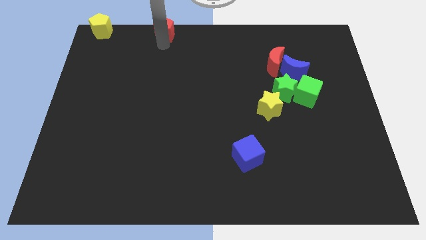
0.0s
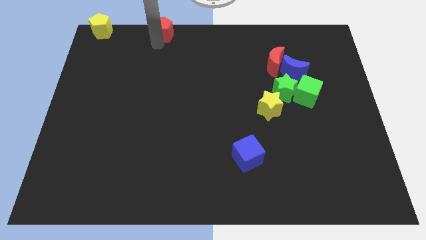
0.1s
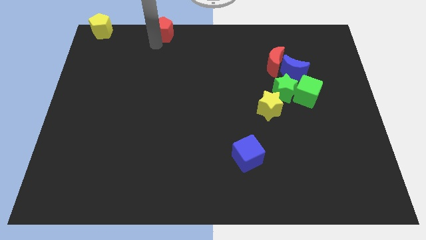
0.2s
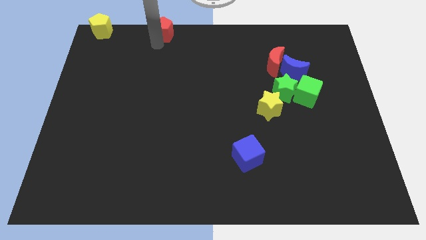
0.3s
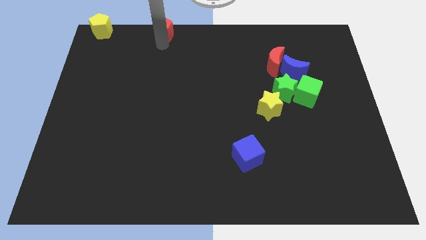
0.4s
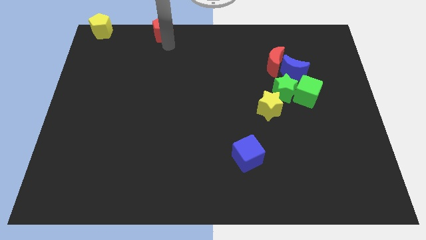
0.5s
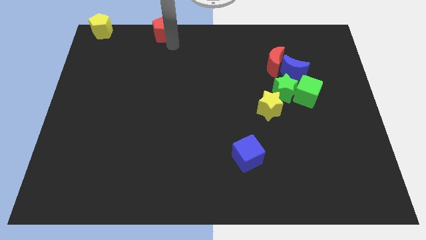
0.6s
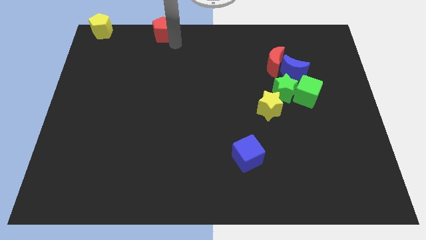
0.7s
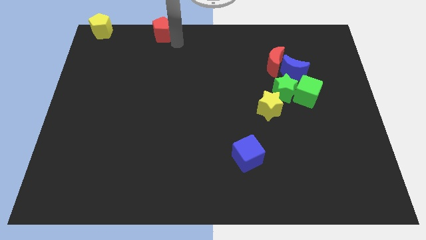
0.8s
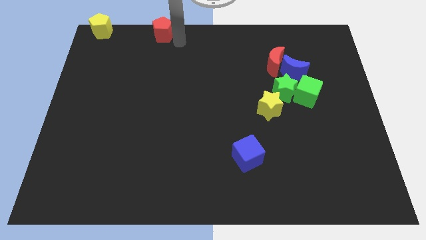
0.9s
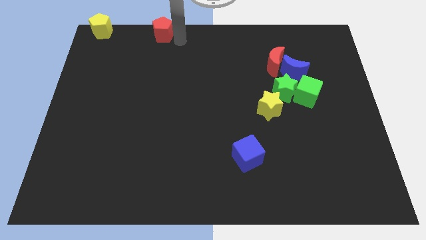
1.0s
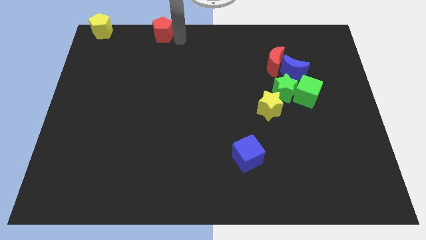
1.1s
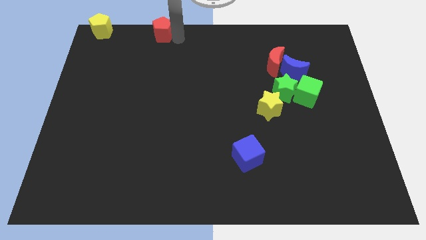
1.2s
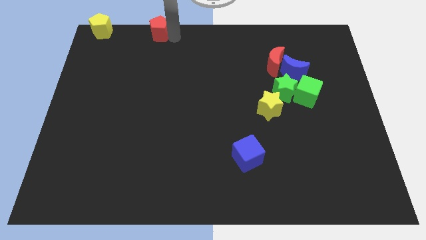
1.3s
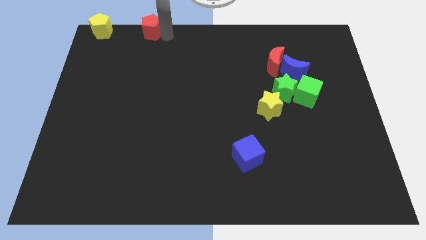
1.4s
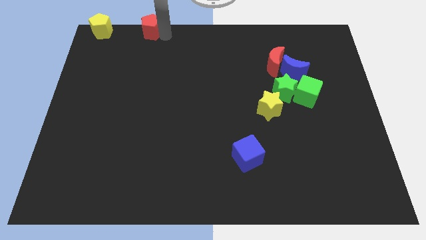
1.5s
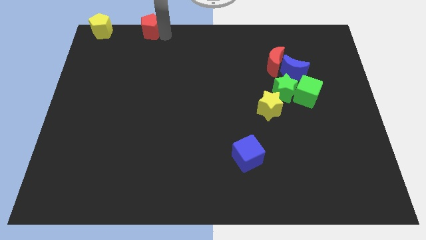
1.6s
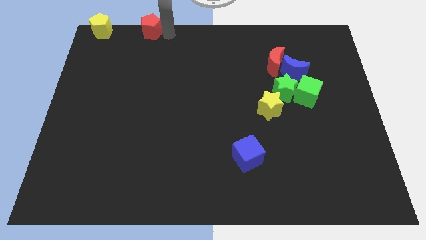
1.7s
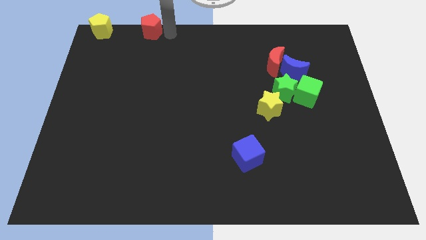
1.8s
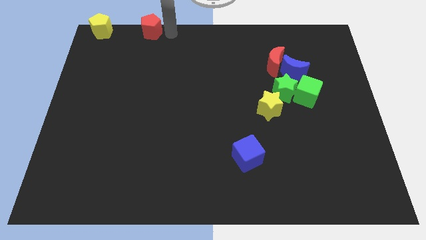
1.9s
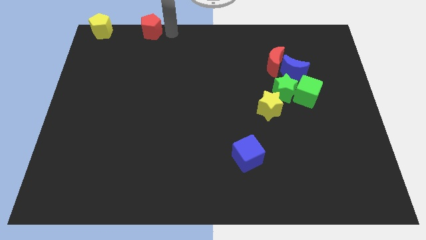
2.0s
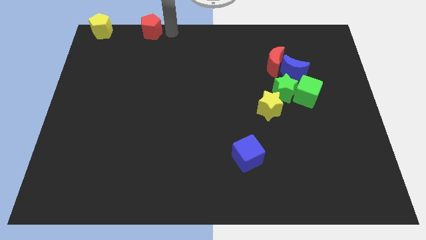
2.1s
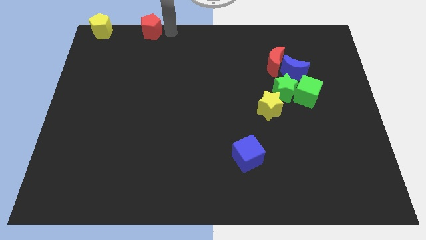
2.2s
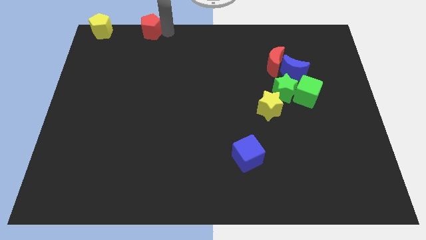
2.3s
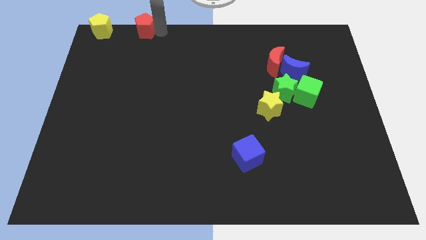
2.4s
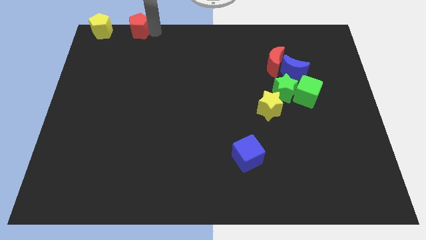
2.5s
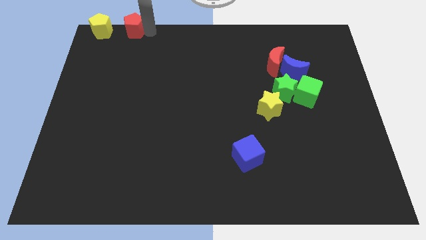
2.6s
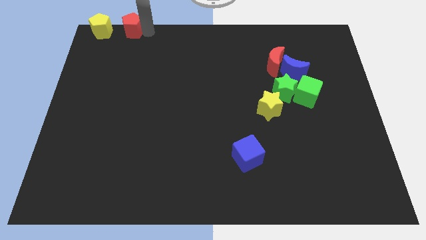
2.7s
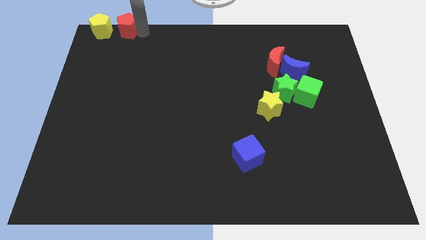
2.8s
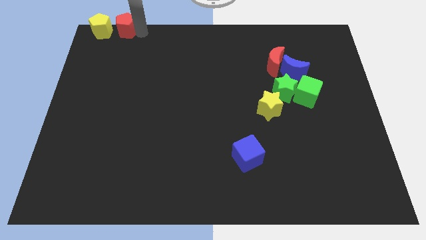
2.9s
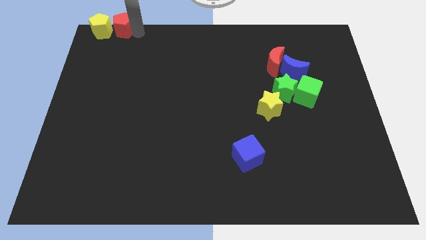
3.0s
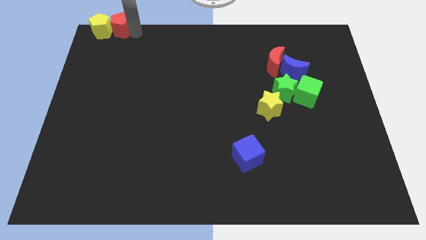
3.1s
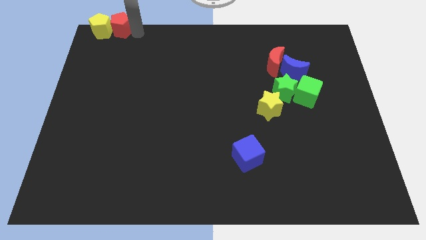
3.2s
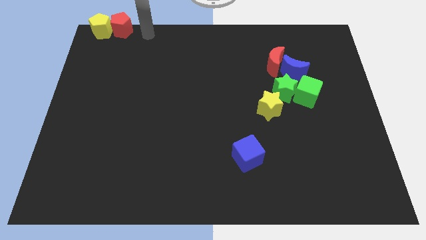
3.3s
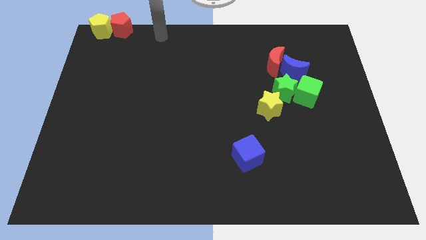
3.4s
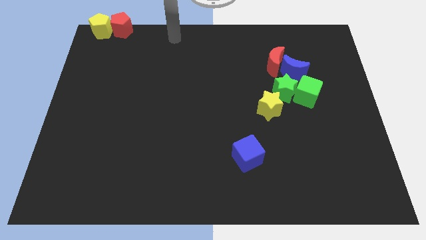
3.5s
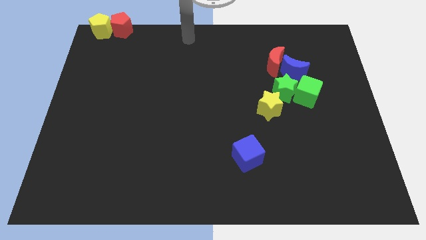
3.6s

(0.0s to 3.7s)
move the red pentagon into the yellow pentagon

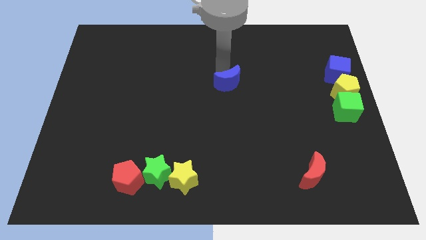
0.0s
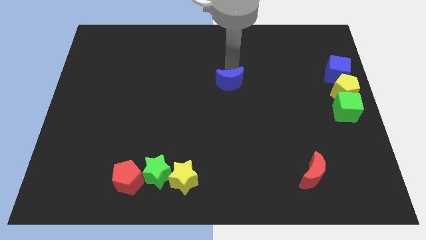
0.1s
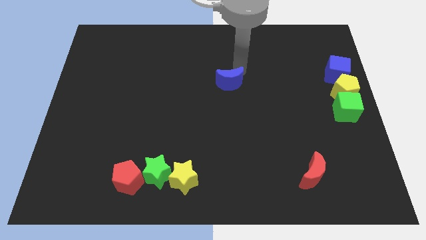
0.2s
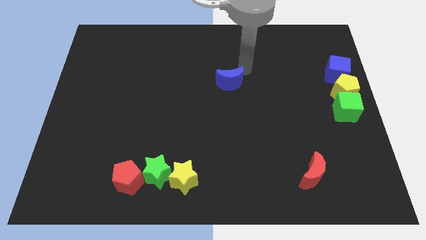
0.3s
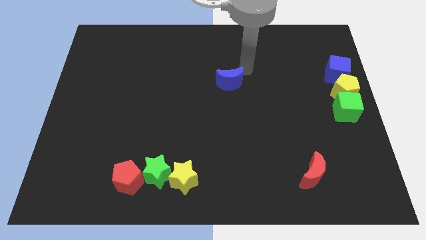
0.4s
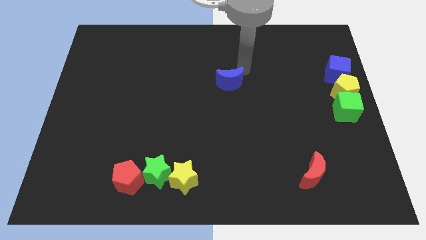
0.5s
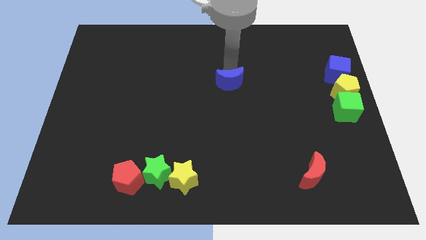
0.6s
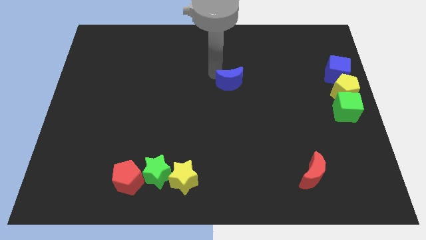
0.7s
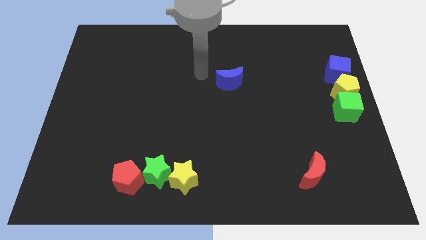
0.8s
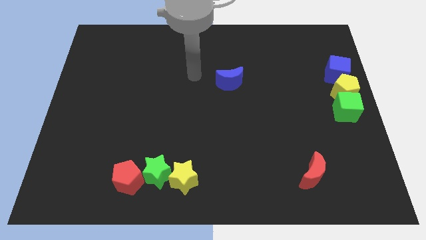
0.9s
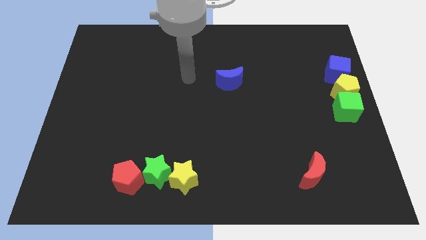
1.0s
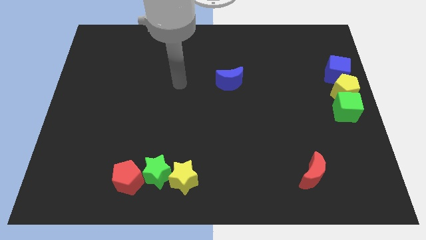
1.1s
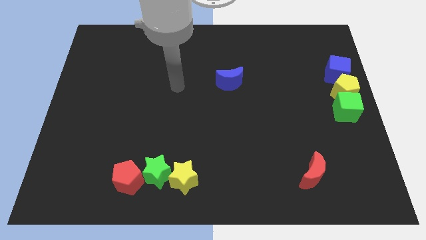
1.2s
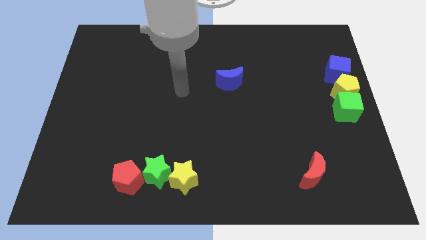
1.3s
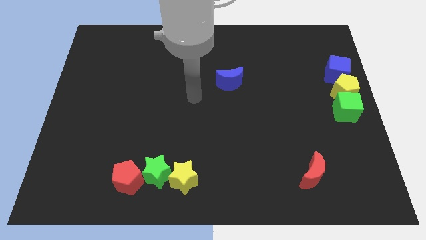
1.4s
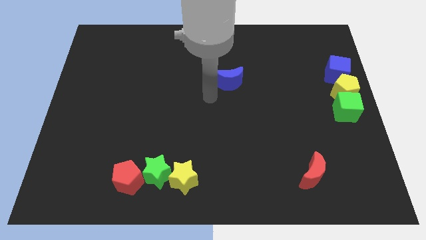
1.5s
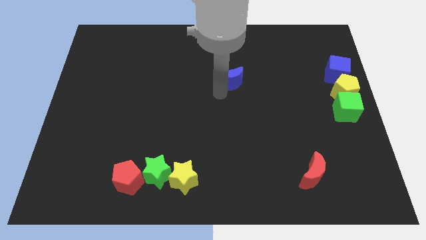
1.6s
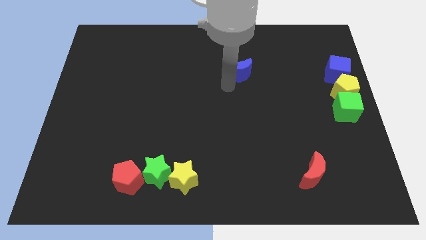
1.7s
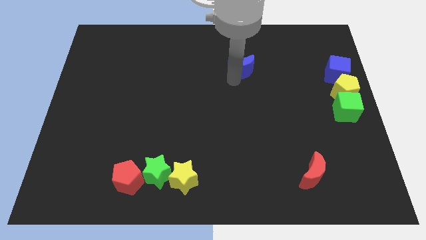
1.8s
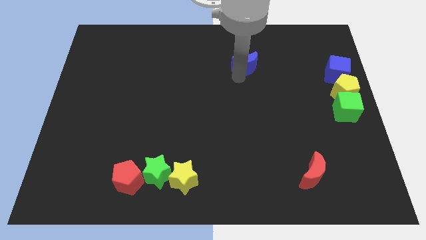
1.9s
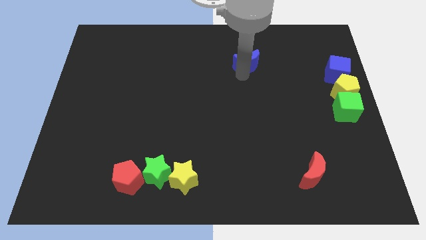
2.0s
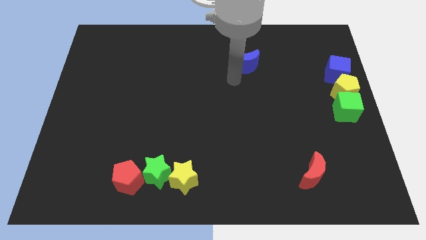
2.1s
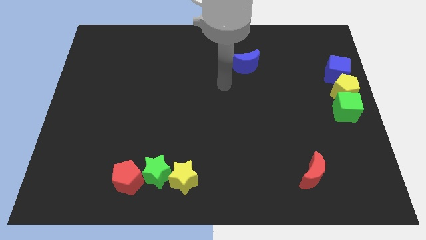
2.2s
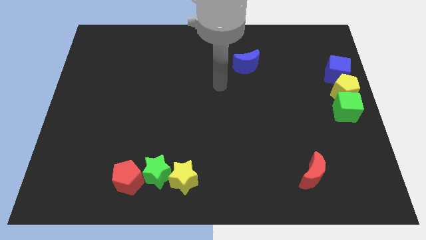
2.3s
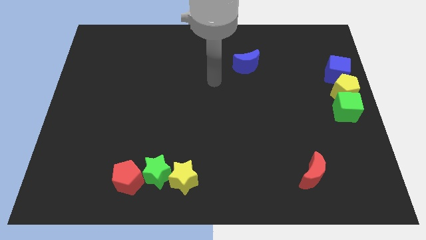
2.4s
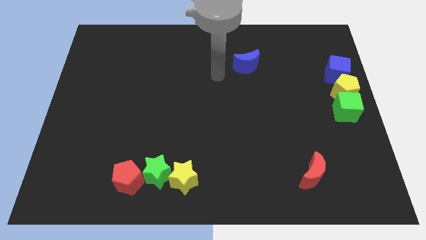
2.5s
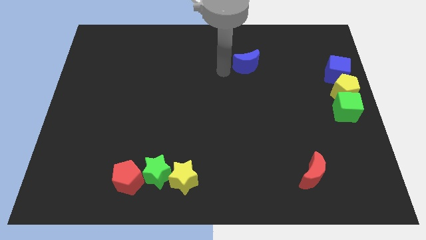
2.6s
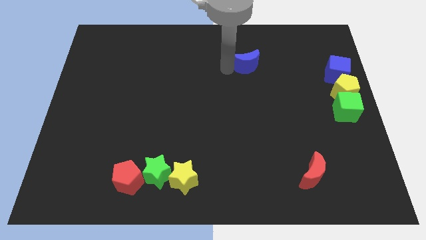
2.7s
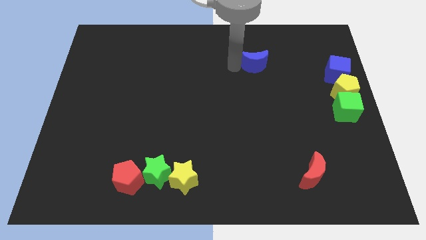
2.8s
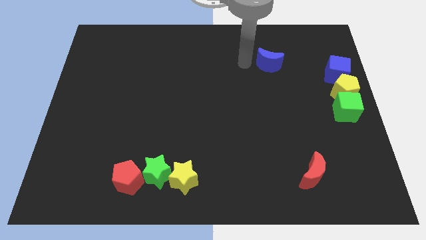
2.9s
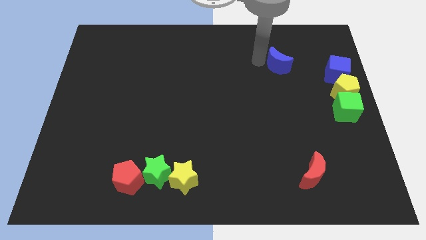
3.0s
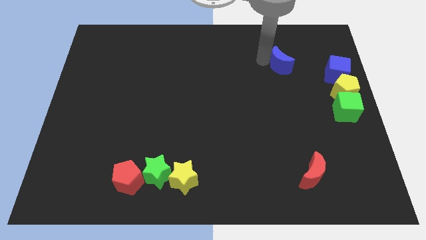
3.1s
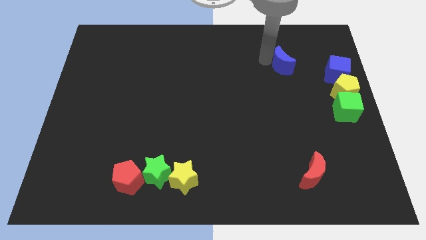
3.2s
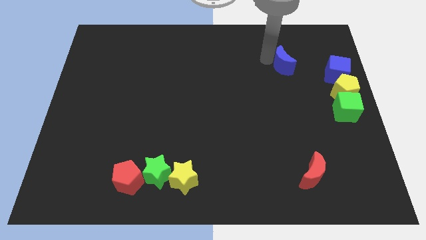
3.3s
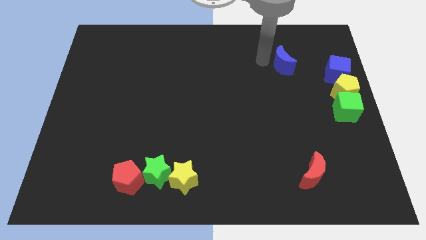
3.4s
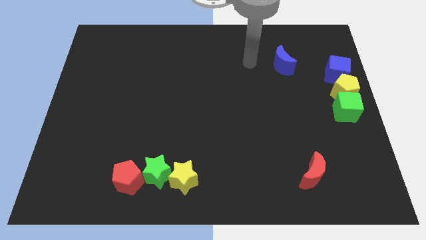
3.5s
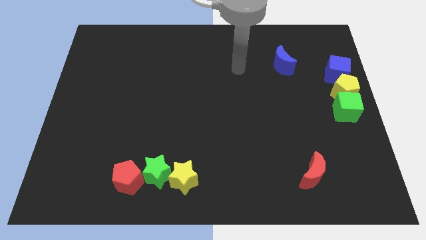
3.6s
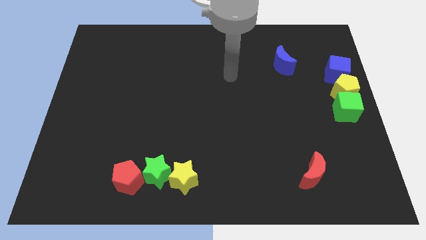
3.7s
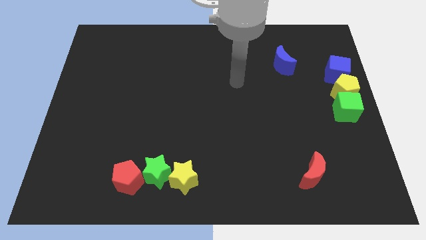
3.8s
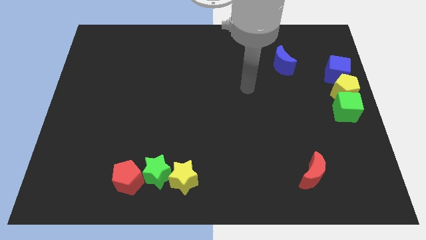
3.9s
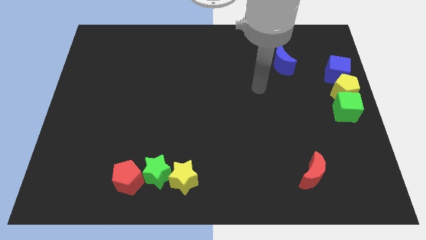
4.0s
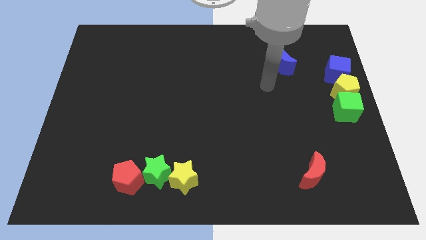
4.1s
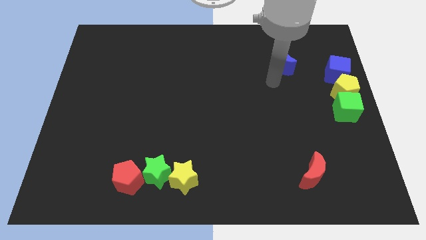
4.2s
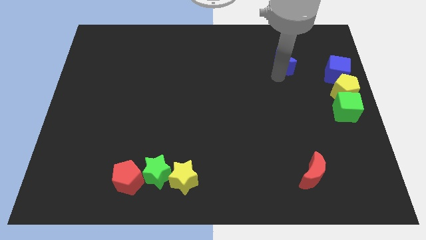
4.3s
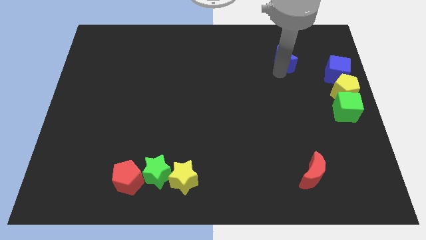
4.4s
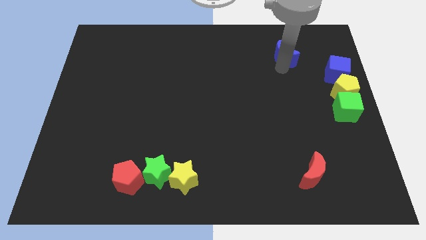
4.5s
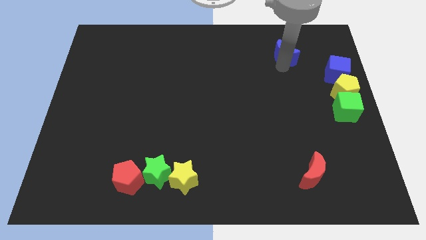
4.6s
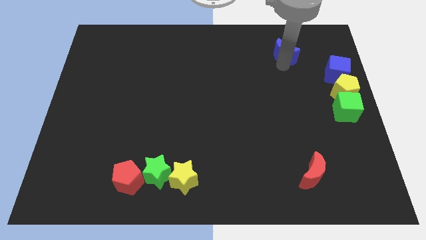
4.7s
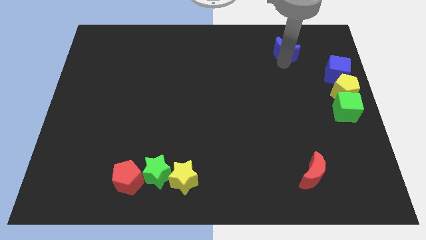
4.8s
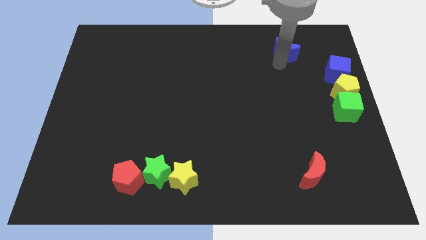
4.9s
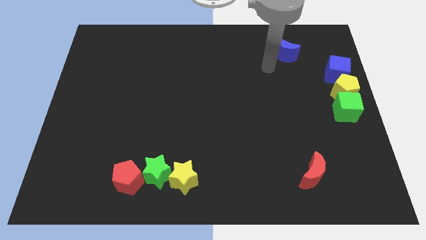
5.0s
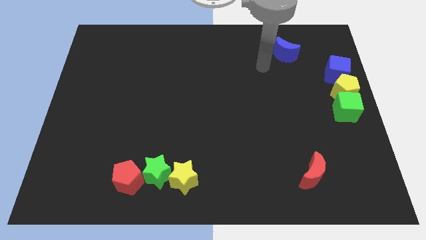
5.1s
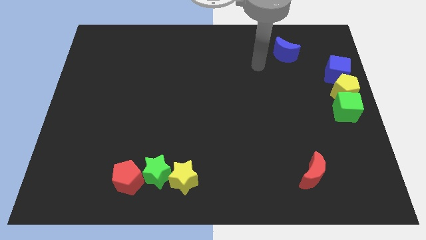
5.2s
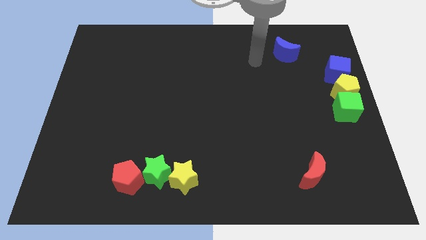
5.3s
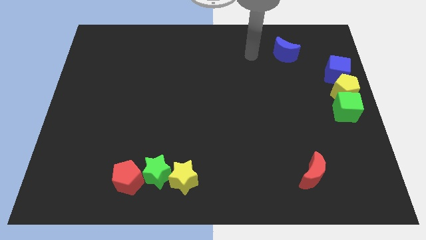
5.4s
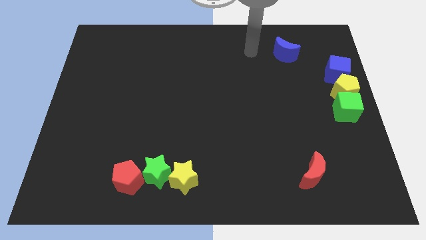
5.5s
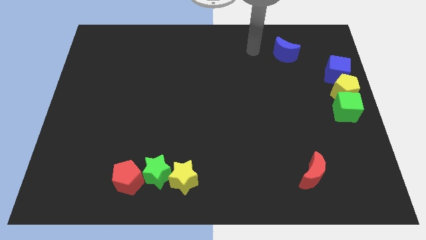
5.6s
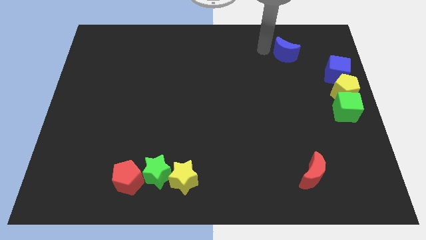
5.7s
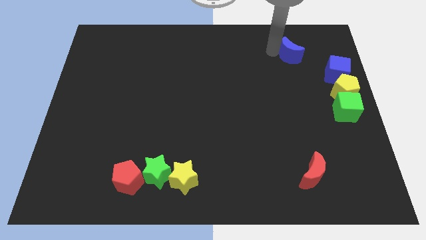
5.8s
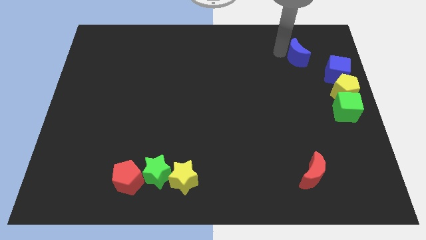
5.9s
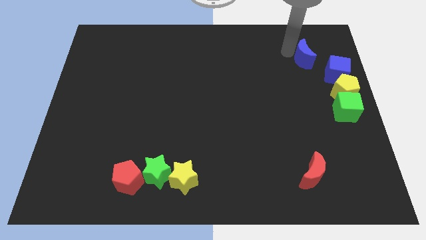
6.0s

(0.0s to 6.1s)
place blue moon to the top left of blue cube
